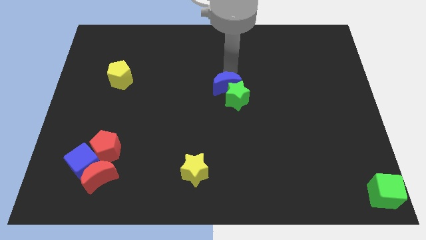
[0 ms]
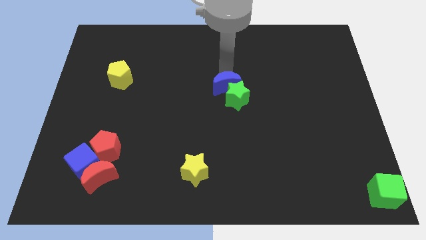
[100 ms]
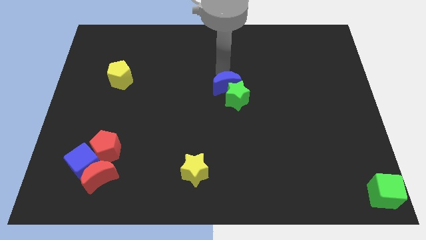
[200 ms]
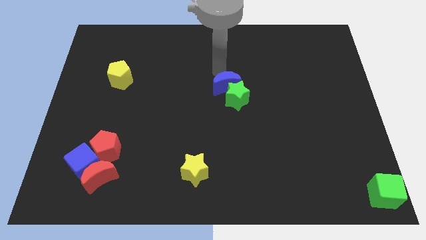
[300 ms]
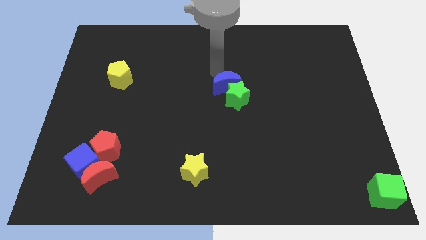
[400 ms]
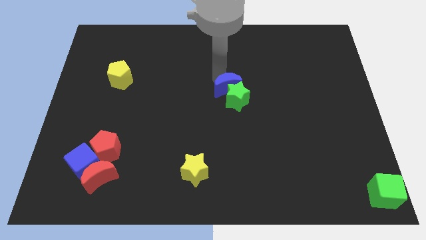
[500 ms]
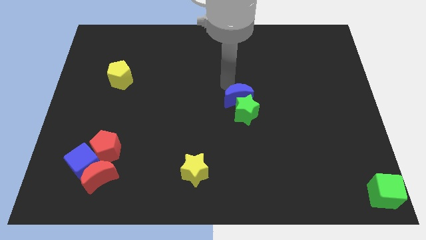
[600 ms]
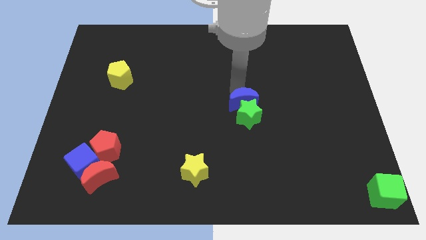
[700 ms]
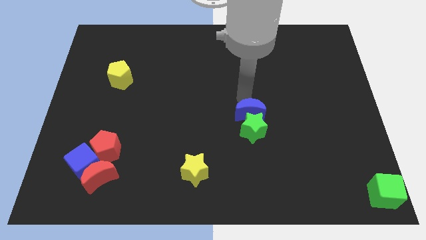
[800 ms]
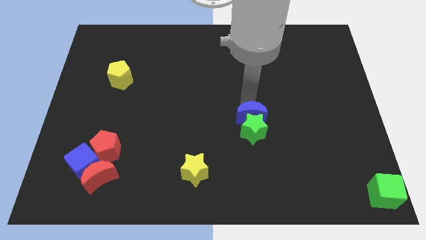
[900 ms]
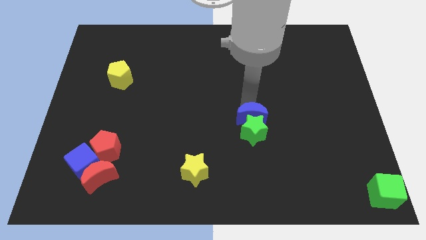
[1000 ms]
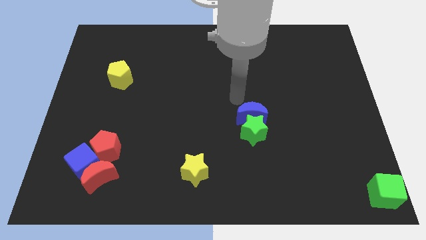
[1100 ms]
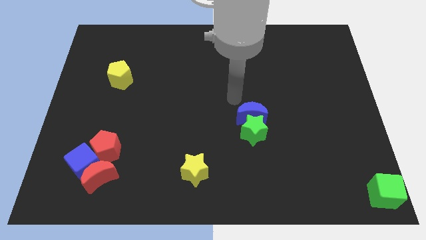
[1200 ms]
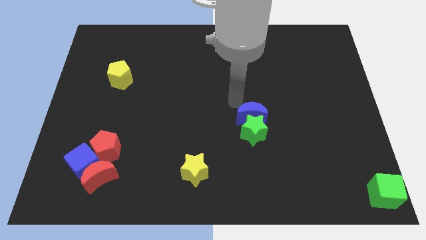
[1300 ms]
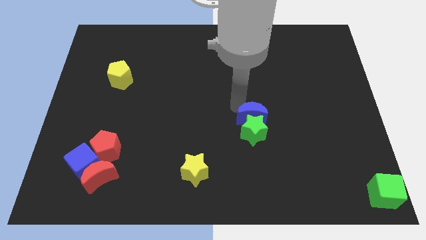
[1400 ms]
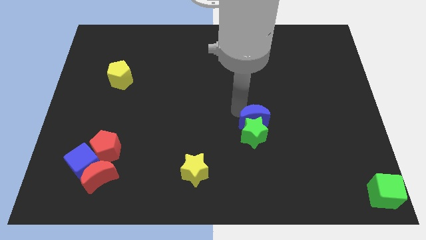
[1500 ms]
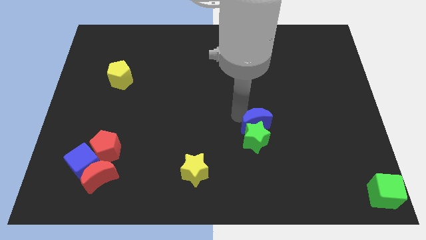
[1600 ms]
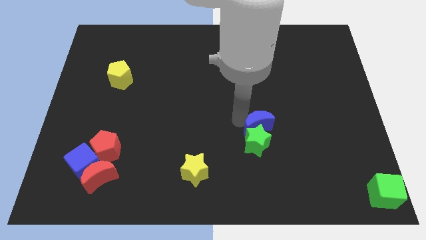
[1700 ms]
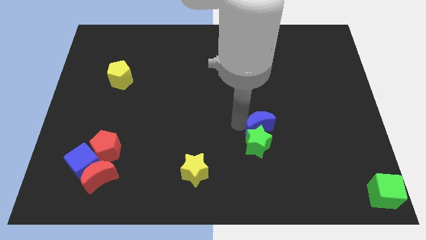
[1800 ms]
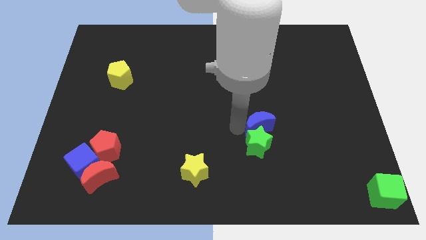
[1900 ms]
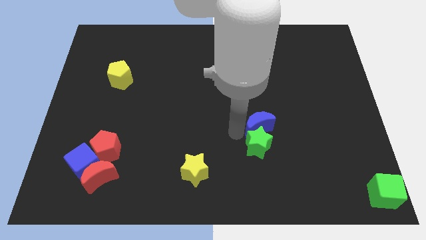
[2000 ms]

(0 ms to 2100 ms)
push the blue moon along with the green star towards the bottom side

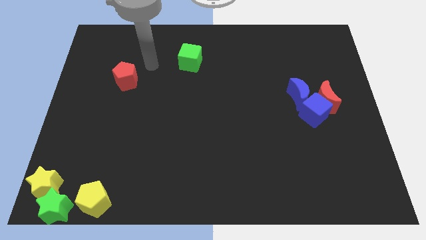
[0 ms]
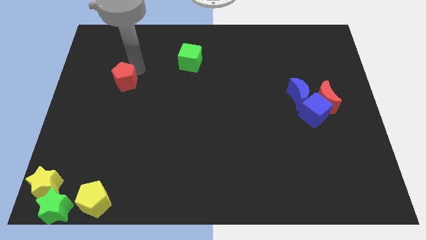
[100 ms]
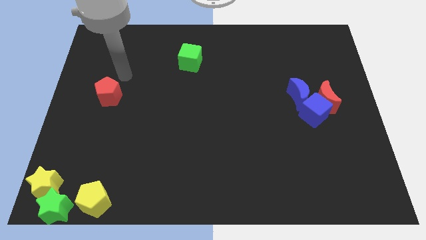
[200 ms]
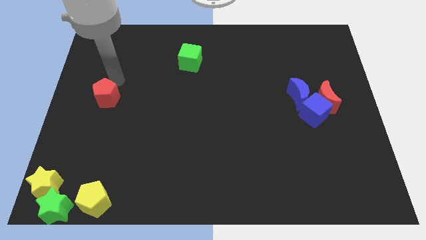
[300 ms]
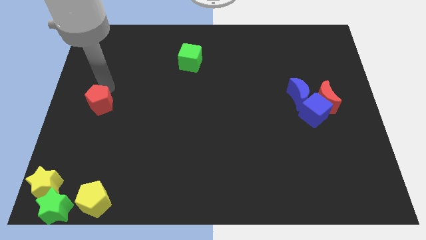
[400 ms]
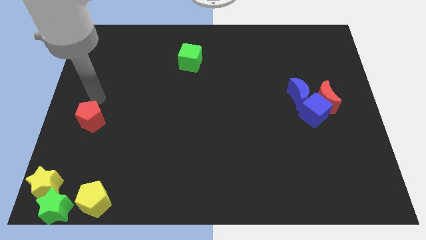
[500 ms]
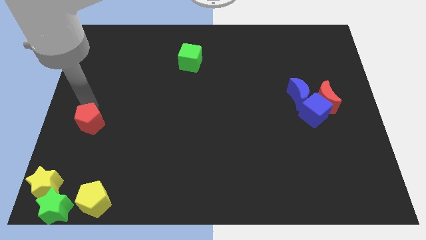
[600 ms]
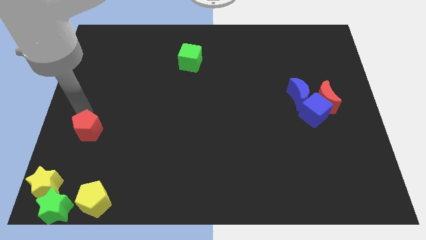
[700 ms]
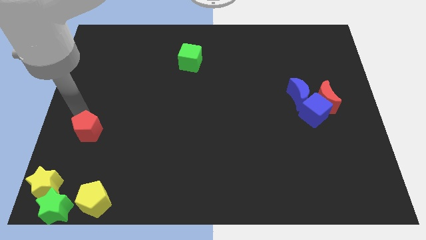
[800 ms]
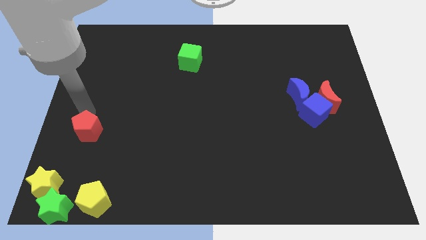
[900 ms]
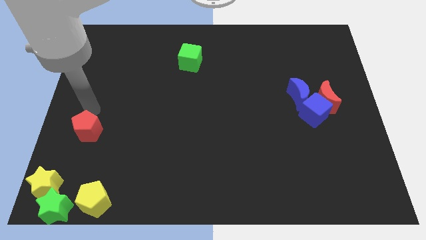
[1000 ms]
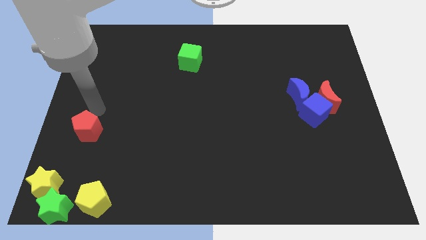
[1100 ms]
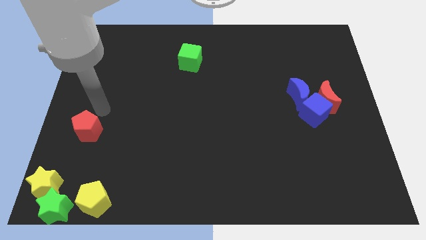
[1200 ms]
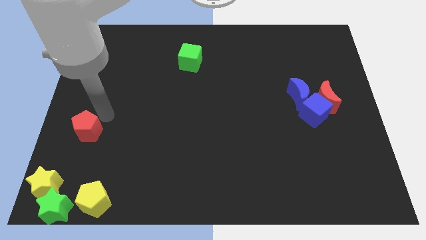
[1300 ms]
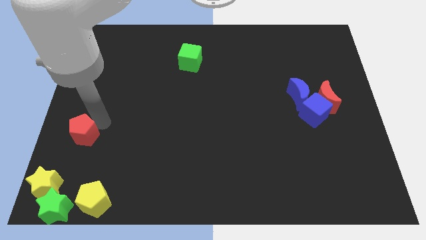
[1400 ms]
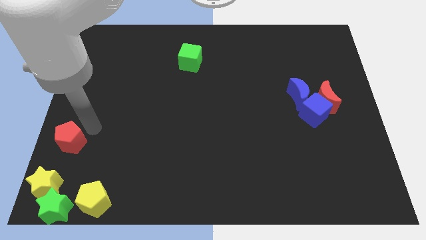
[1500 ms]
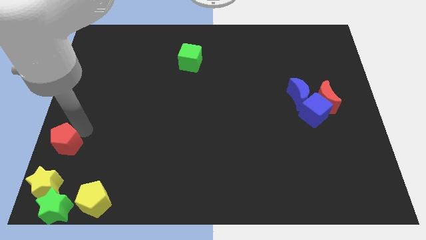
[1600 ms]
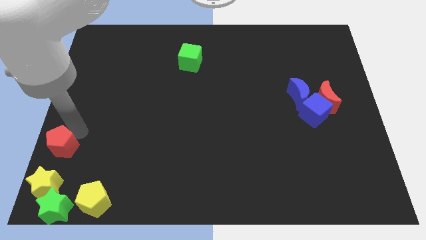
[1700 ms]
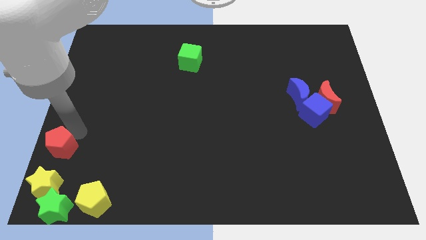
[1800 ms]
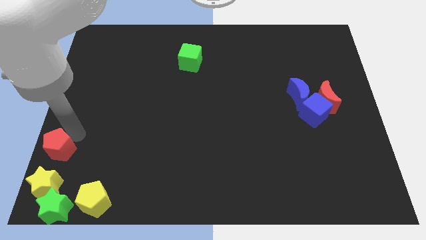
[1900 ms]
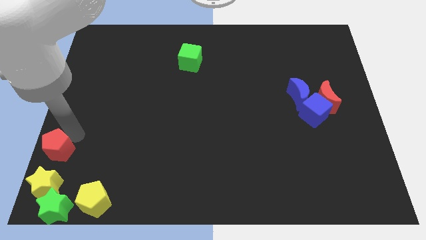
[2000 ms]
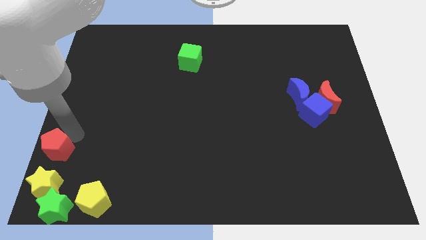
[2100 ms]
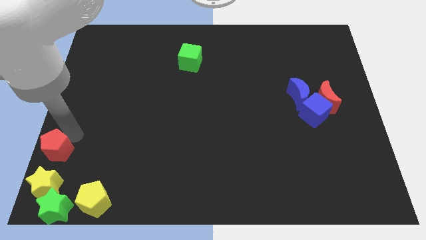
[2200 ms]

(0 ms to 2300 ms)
move the red pentagon above the yellow star

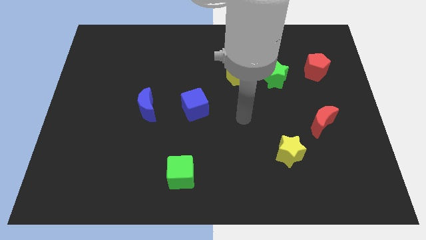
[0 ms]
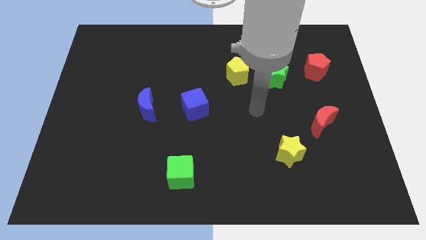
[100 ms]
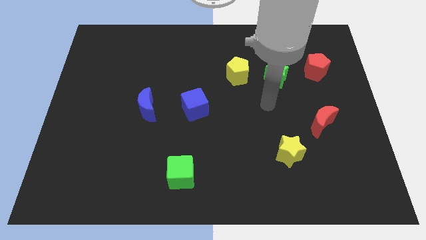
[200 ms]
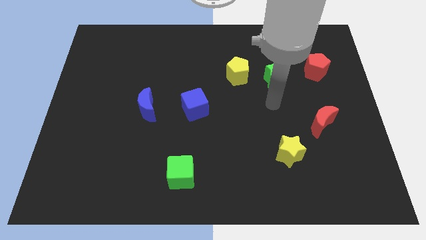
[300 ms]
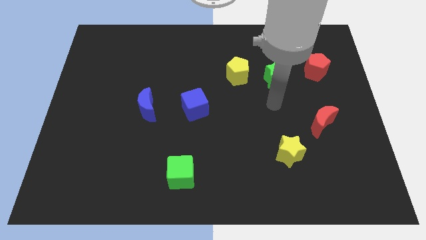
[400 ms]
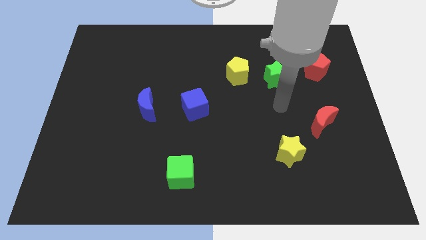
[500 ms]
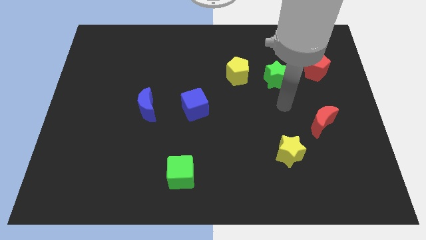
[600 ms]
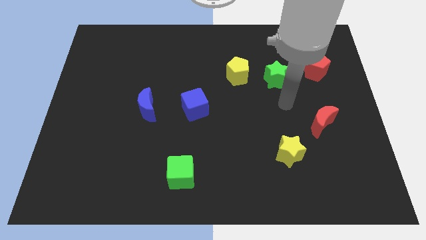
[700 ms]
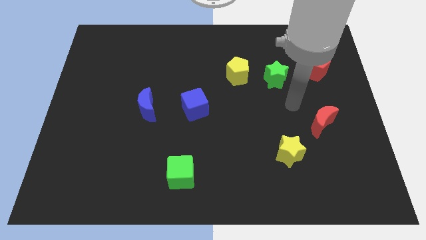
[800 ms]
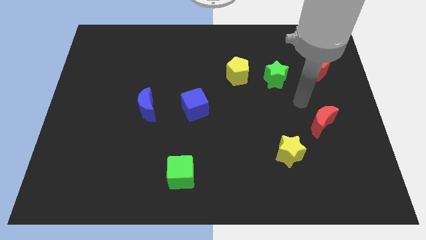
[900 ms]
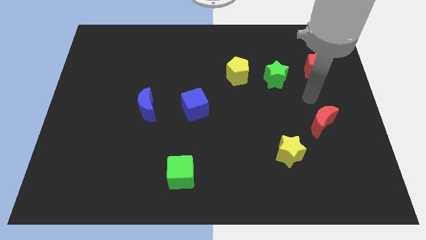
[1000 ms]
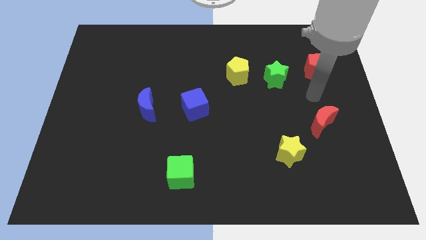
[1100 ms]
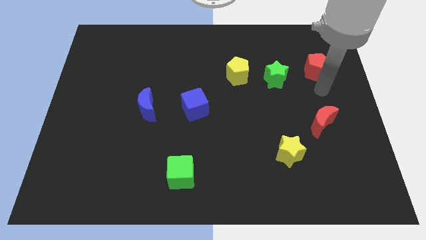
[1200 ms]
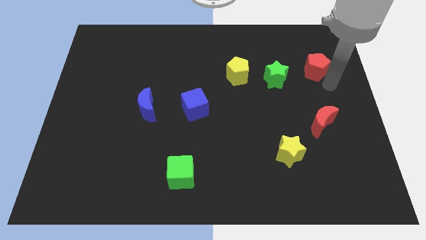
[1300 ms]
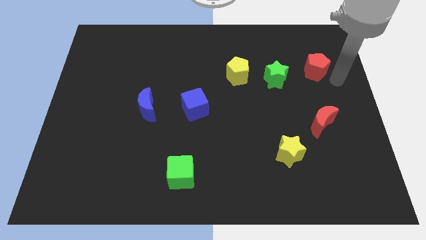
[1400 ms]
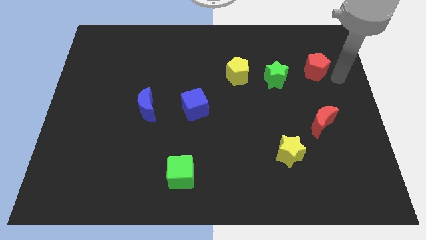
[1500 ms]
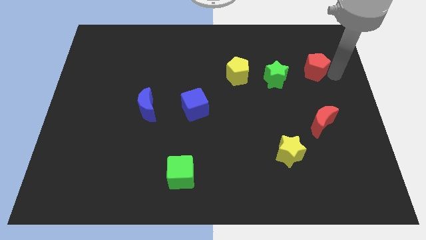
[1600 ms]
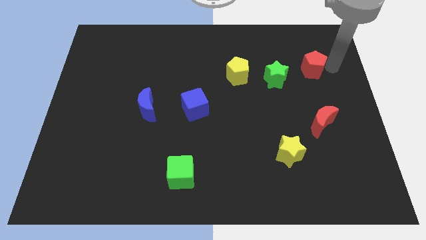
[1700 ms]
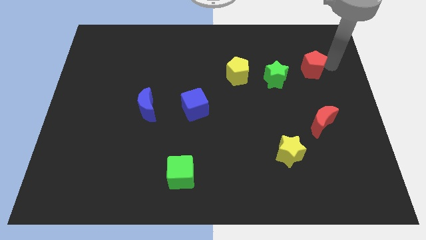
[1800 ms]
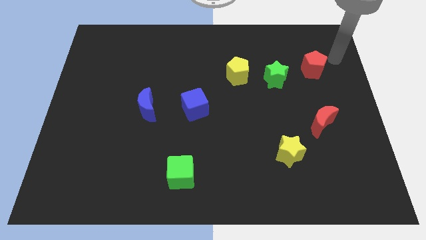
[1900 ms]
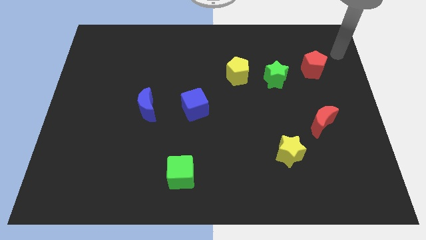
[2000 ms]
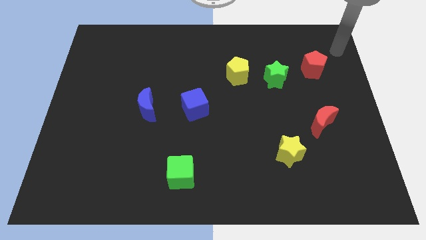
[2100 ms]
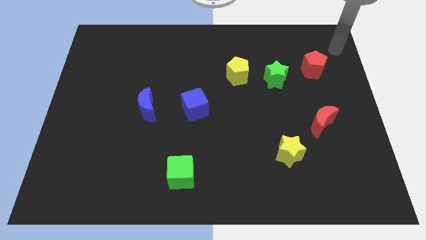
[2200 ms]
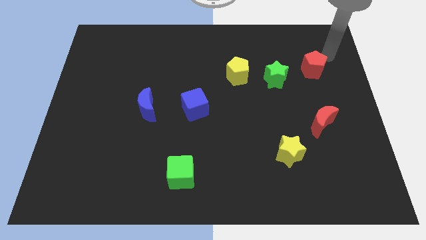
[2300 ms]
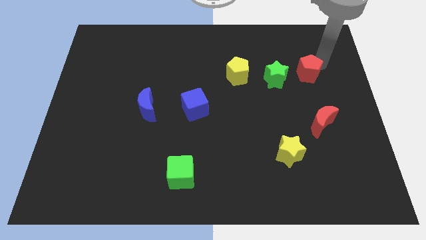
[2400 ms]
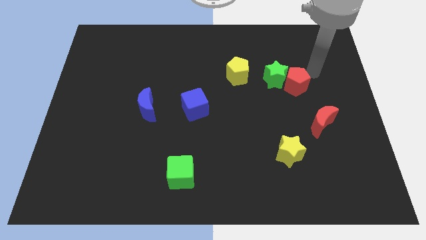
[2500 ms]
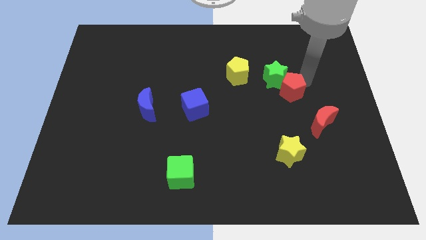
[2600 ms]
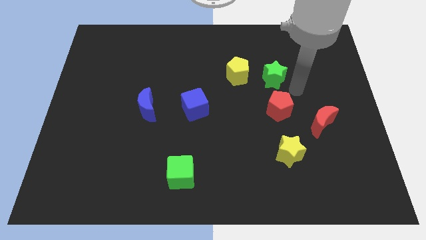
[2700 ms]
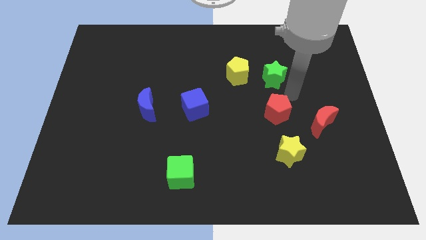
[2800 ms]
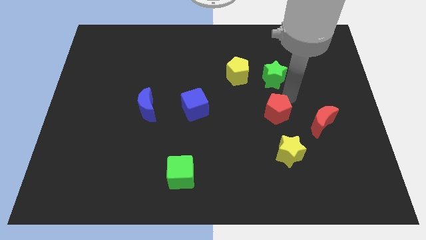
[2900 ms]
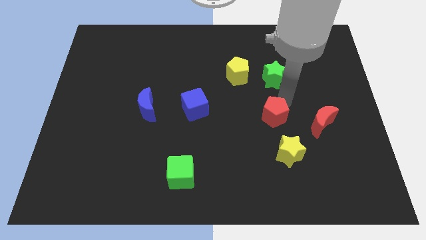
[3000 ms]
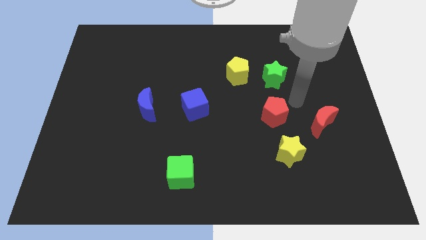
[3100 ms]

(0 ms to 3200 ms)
slide the red pentagon in between the green star and the yellow star

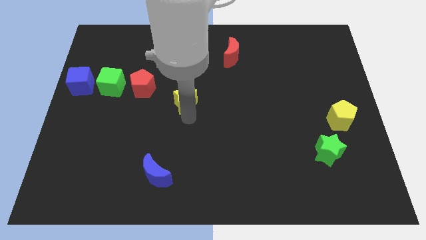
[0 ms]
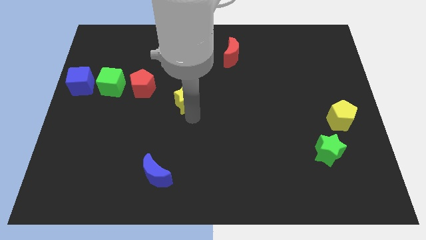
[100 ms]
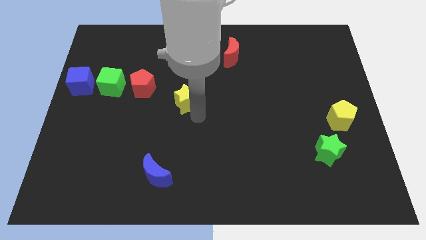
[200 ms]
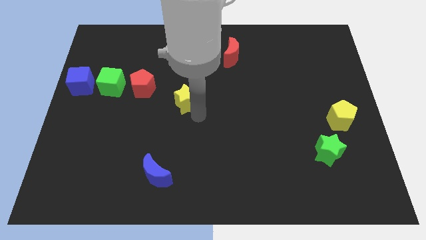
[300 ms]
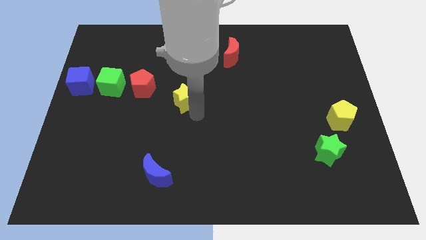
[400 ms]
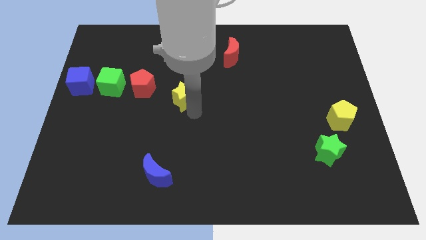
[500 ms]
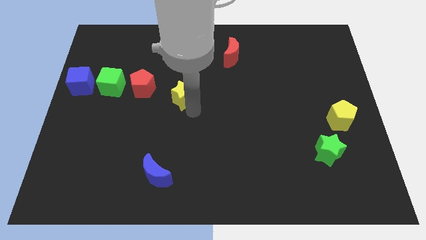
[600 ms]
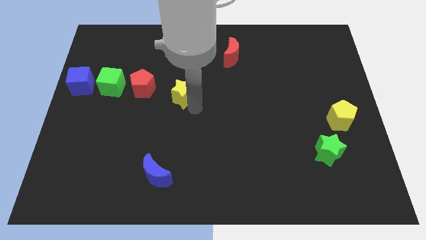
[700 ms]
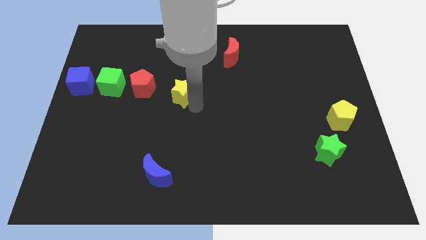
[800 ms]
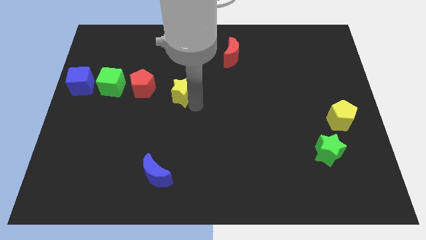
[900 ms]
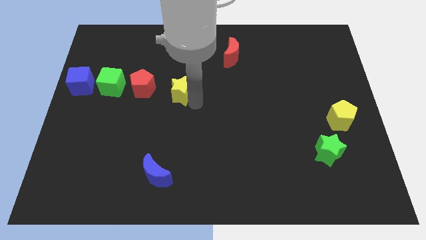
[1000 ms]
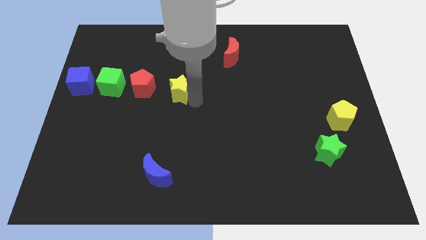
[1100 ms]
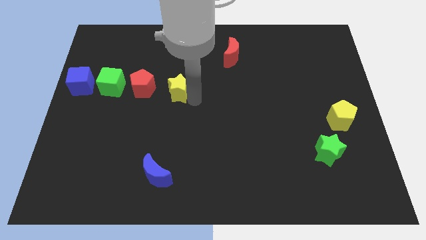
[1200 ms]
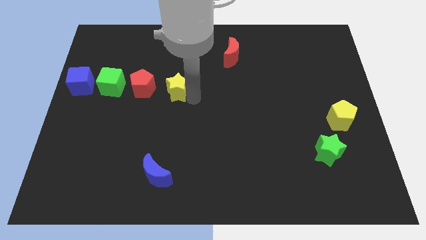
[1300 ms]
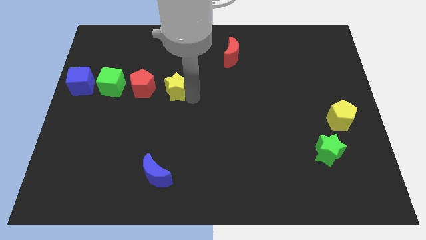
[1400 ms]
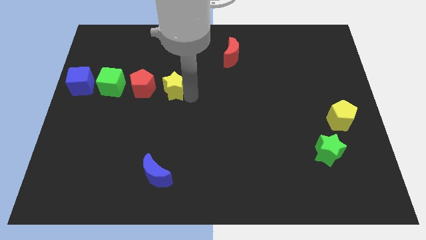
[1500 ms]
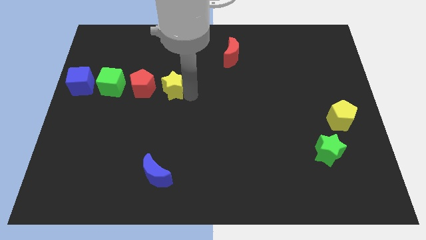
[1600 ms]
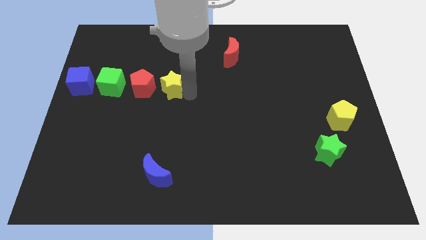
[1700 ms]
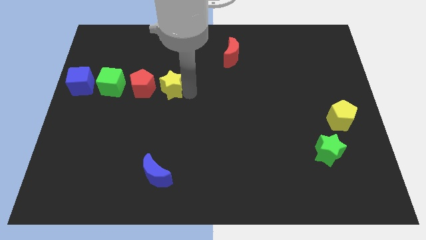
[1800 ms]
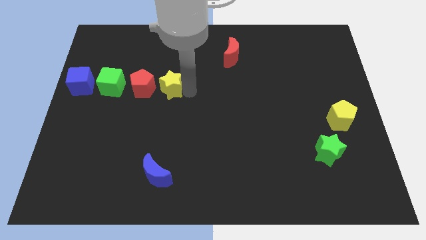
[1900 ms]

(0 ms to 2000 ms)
move the yellow star to the right of the red pentagon
